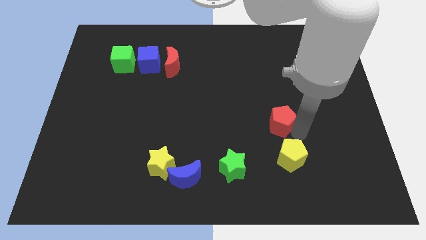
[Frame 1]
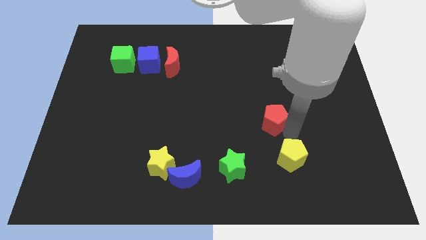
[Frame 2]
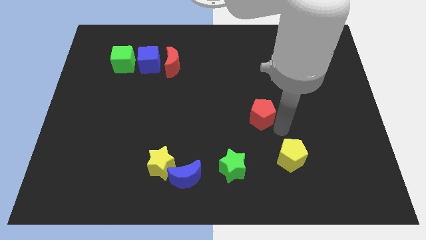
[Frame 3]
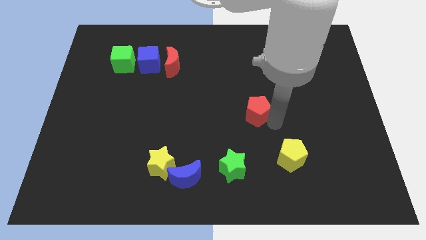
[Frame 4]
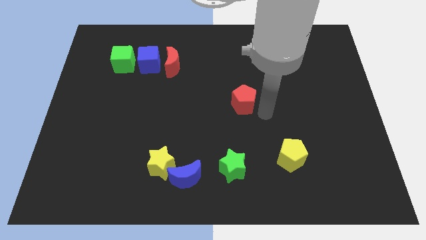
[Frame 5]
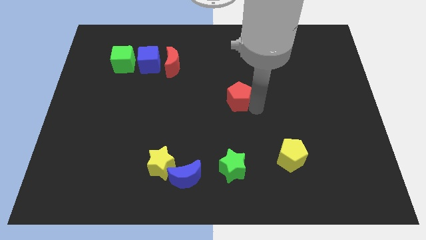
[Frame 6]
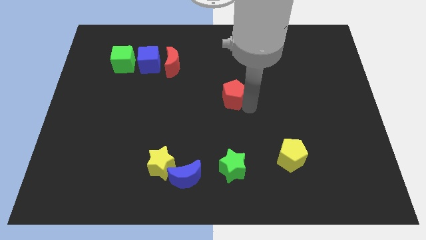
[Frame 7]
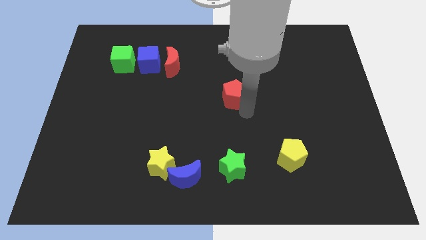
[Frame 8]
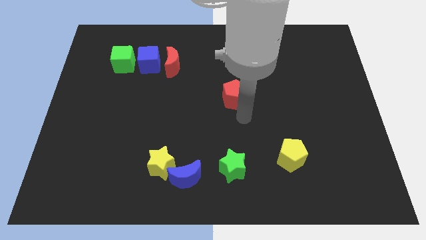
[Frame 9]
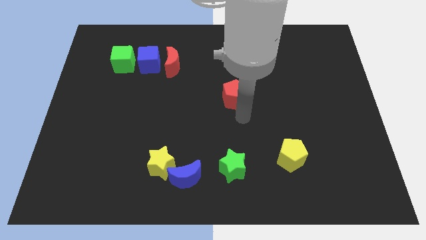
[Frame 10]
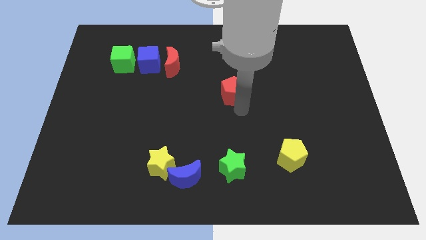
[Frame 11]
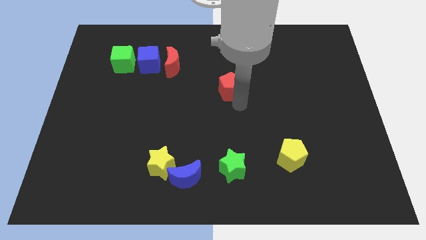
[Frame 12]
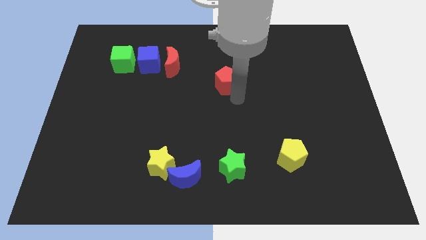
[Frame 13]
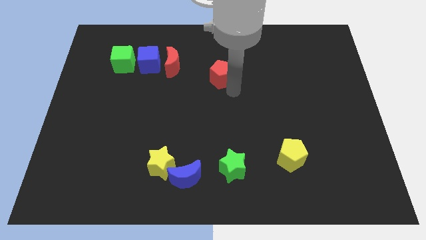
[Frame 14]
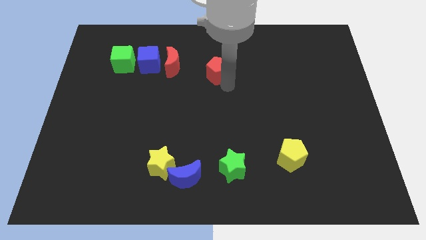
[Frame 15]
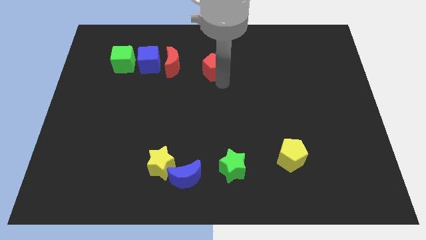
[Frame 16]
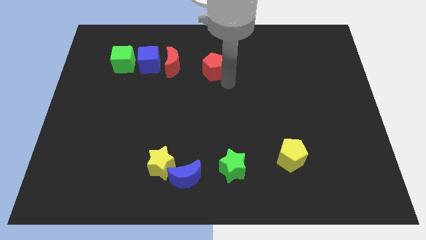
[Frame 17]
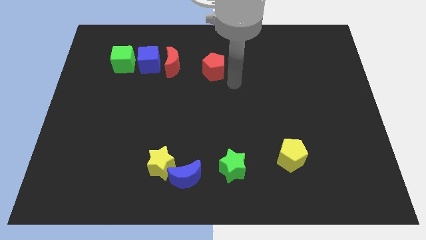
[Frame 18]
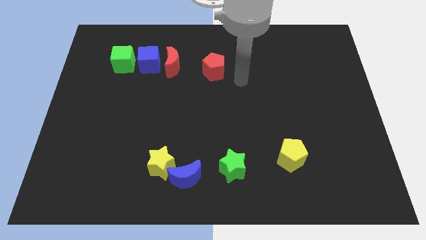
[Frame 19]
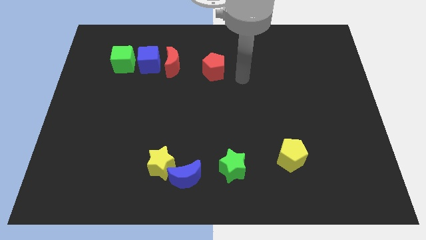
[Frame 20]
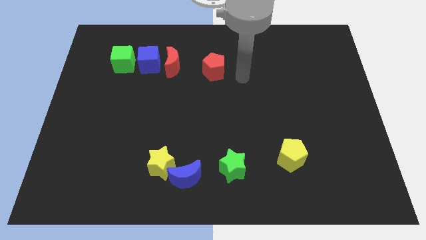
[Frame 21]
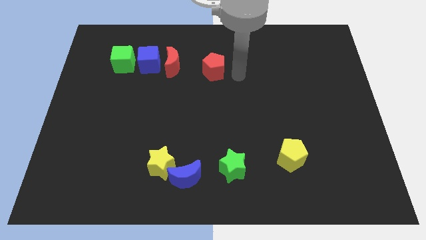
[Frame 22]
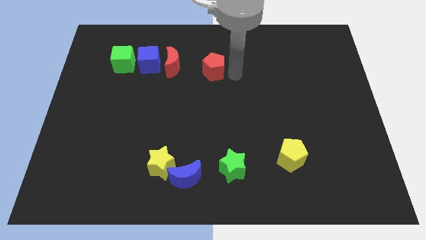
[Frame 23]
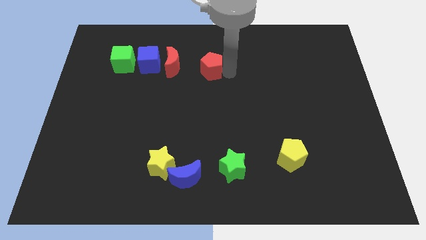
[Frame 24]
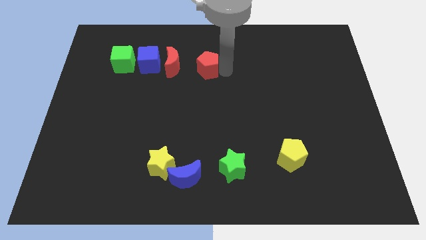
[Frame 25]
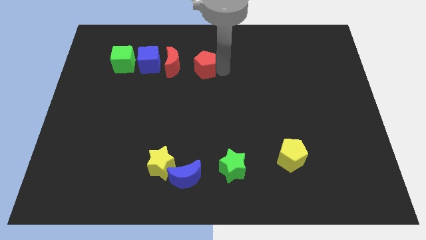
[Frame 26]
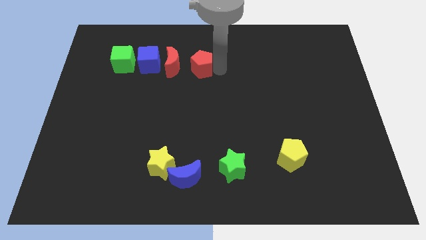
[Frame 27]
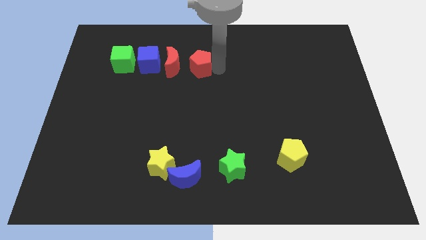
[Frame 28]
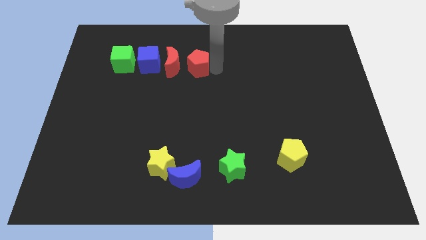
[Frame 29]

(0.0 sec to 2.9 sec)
place red pentagon to the right of the red crescent

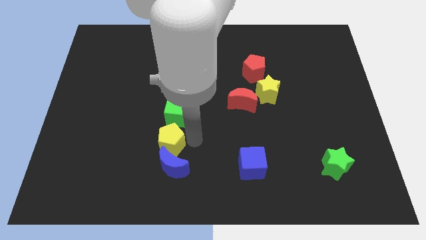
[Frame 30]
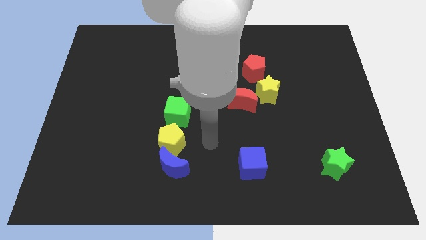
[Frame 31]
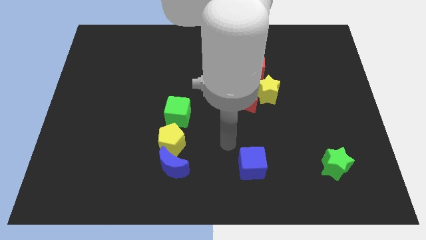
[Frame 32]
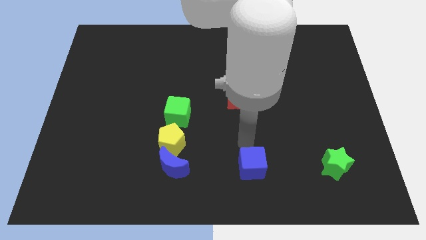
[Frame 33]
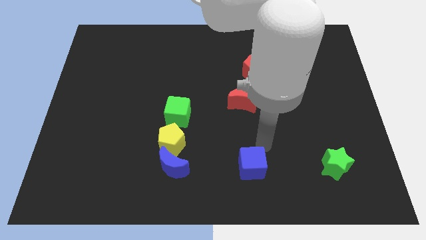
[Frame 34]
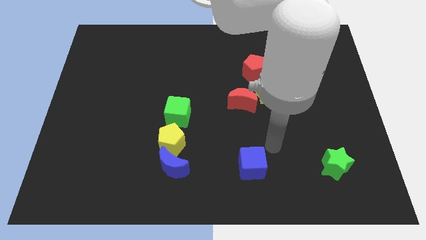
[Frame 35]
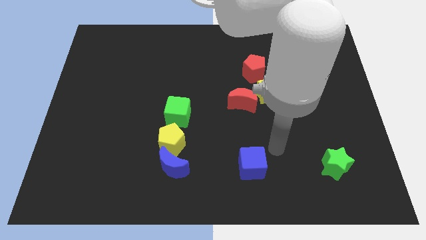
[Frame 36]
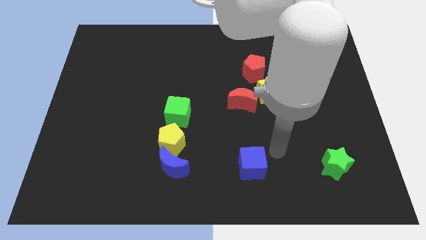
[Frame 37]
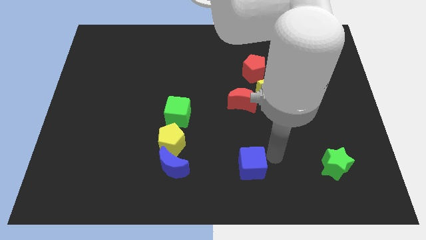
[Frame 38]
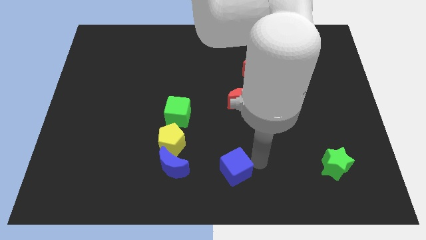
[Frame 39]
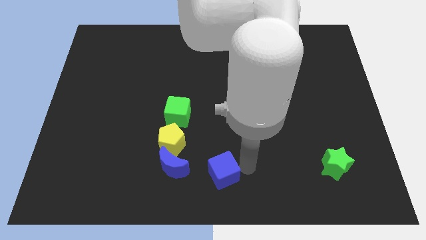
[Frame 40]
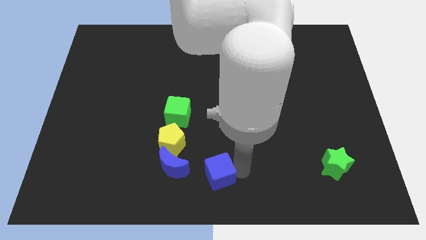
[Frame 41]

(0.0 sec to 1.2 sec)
move the blue block to the right side of the blue moon

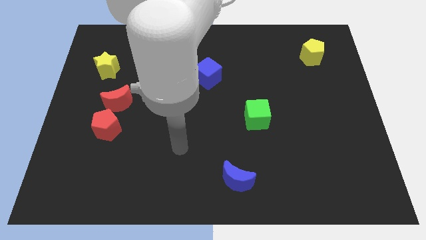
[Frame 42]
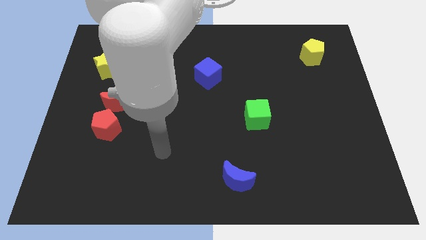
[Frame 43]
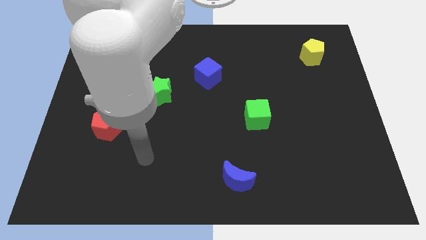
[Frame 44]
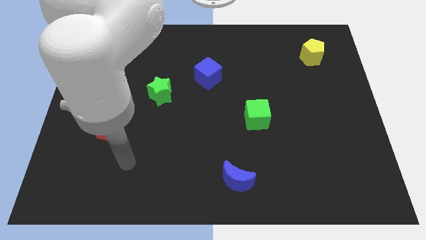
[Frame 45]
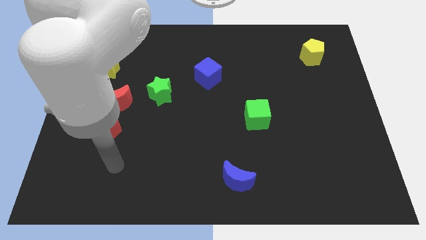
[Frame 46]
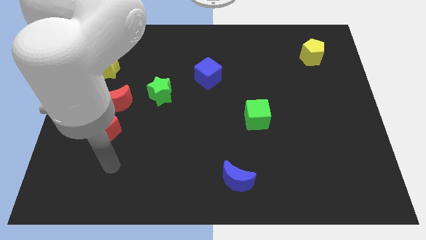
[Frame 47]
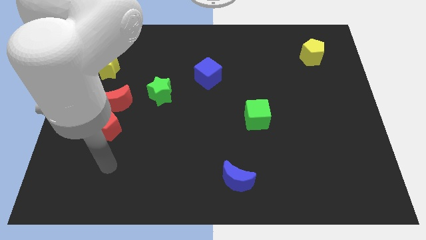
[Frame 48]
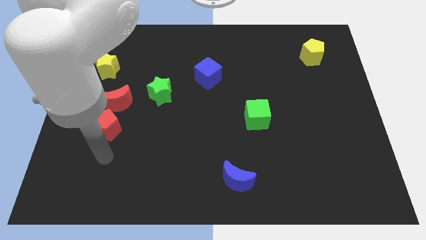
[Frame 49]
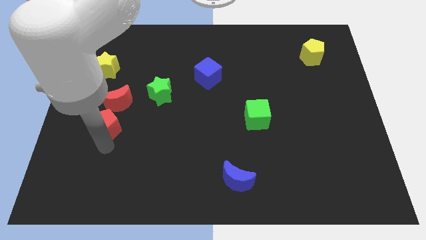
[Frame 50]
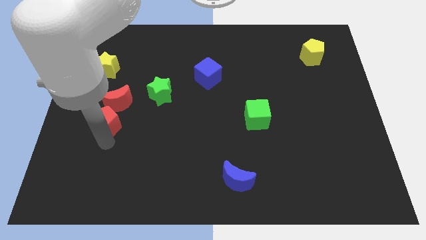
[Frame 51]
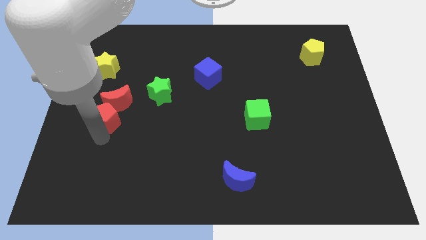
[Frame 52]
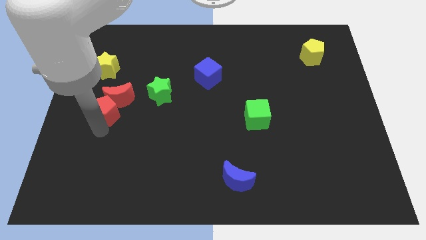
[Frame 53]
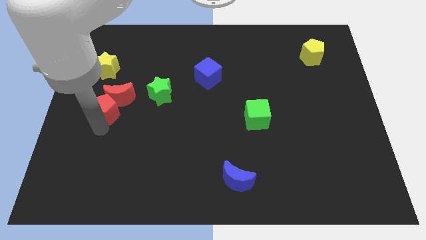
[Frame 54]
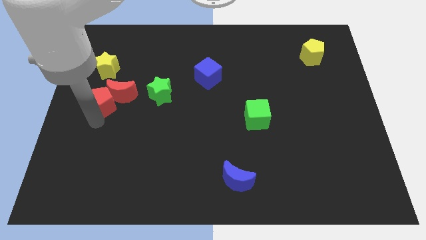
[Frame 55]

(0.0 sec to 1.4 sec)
move the red pentagon into the red crescent

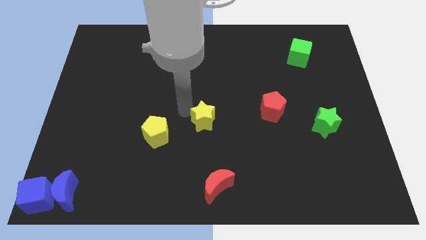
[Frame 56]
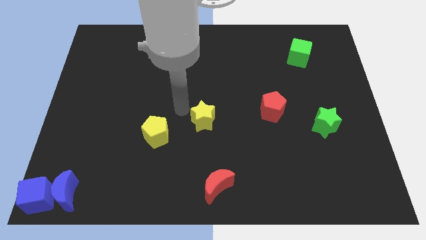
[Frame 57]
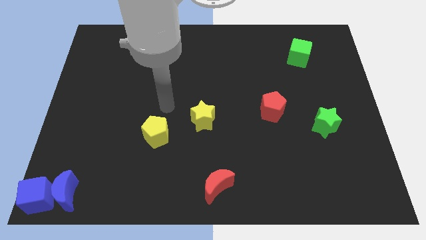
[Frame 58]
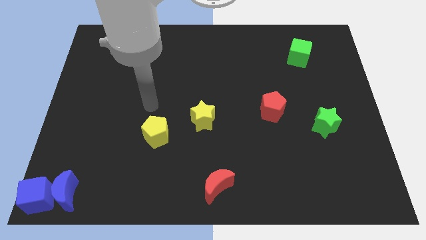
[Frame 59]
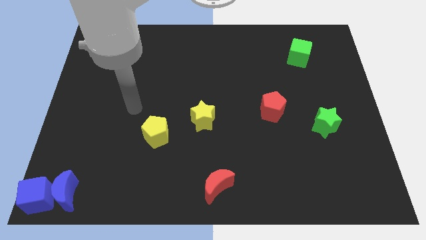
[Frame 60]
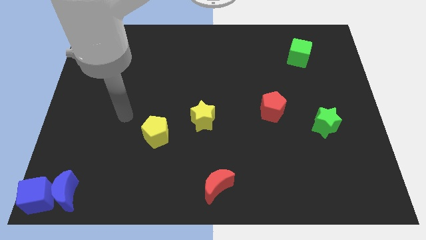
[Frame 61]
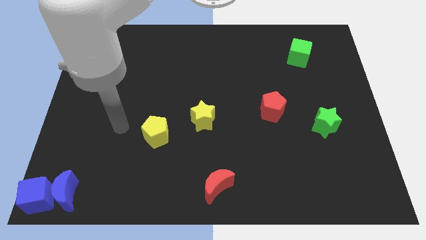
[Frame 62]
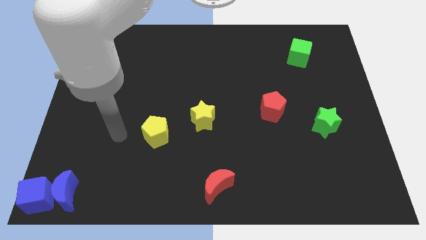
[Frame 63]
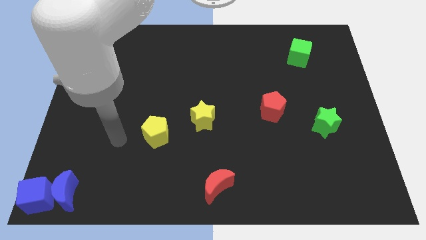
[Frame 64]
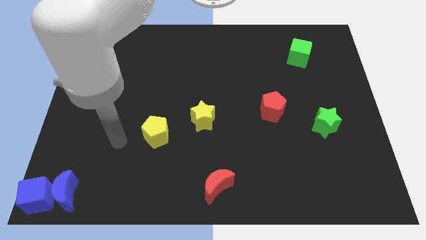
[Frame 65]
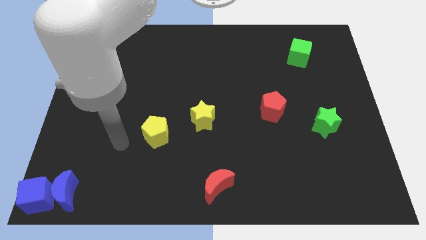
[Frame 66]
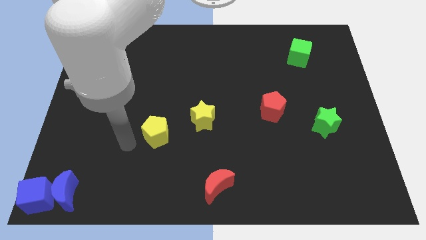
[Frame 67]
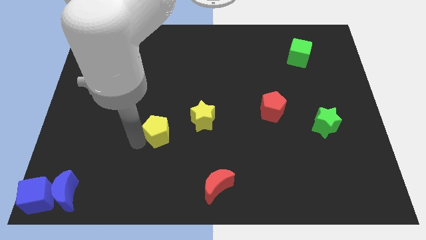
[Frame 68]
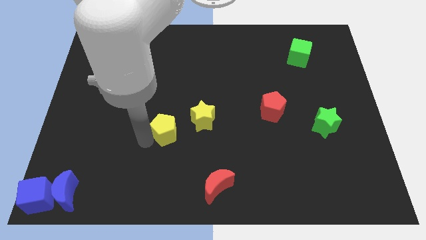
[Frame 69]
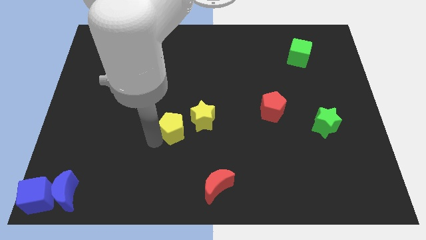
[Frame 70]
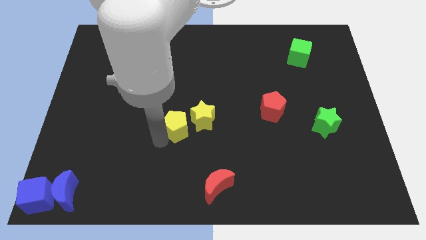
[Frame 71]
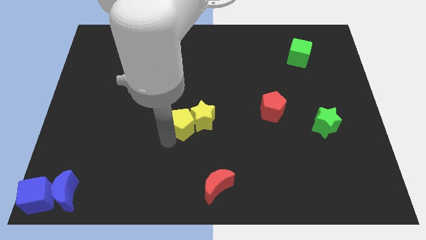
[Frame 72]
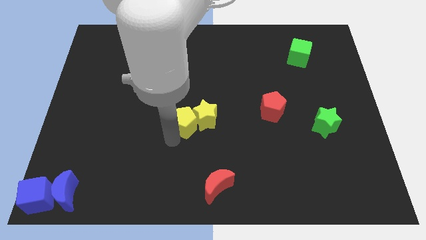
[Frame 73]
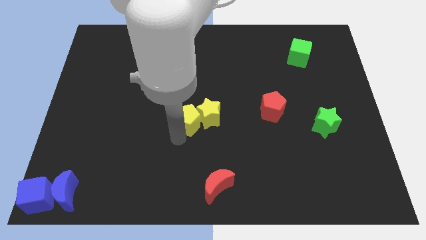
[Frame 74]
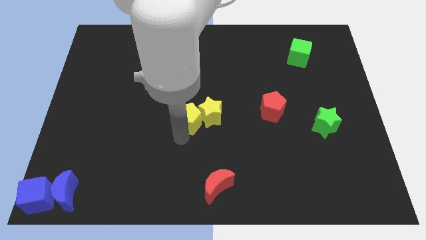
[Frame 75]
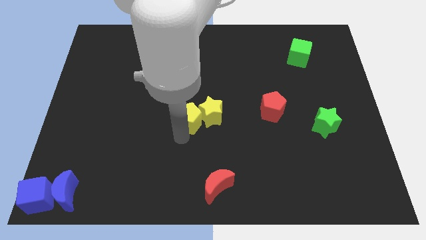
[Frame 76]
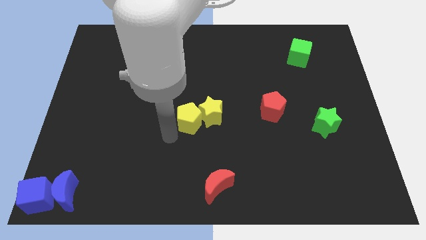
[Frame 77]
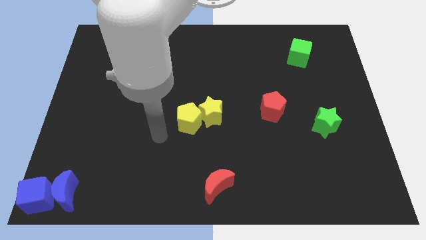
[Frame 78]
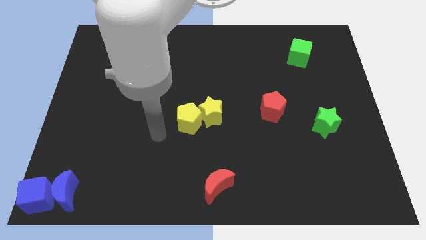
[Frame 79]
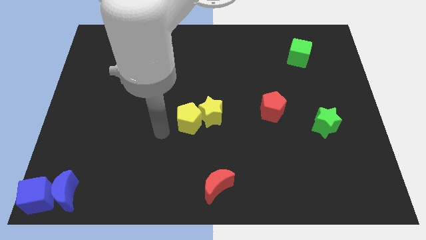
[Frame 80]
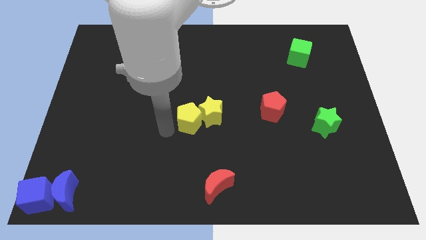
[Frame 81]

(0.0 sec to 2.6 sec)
move yellow pentagon into yellow star

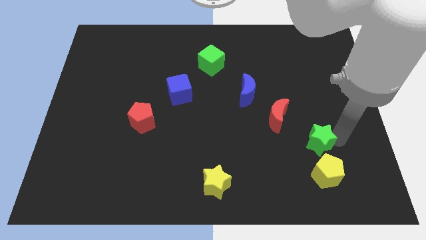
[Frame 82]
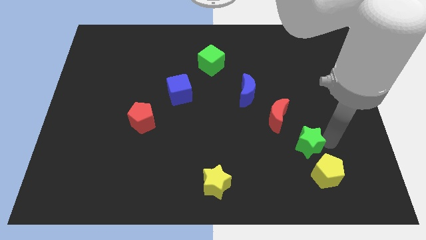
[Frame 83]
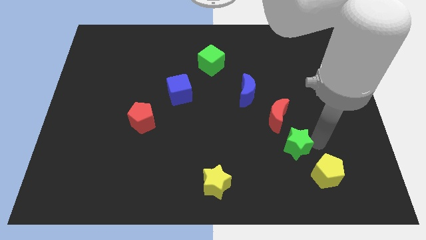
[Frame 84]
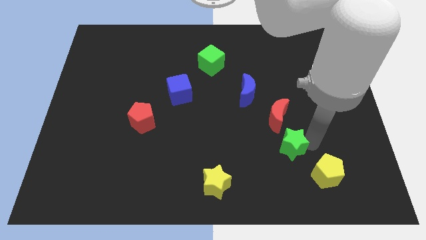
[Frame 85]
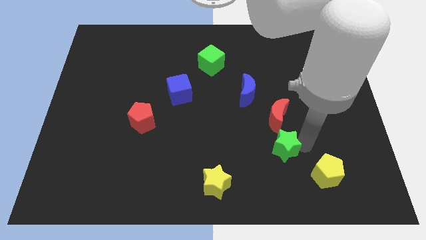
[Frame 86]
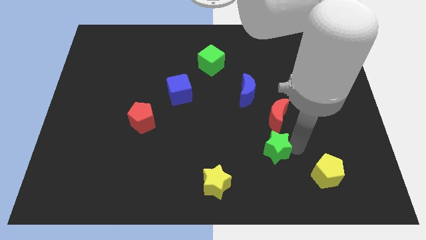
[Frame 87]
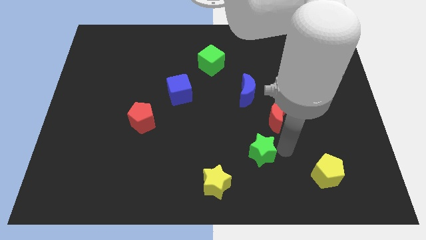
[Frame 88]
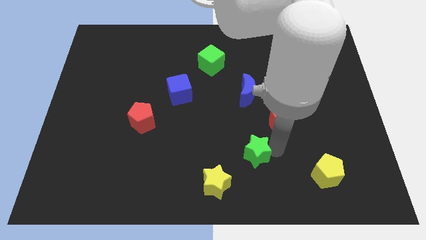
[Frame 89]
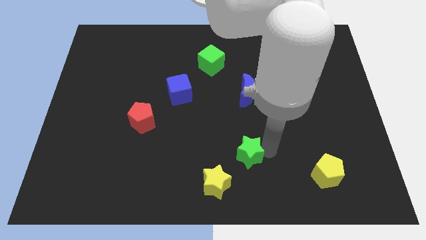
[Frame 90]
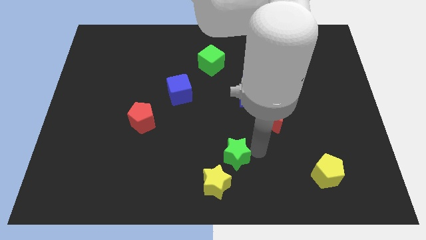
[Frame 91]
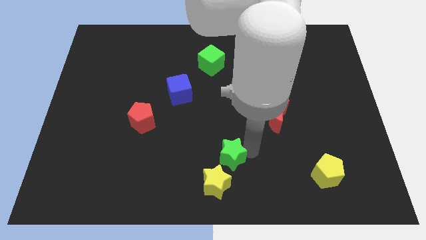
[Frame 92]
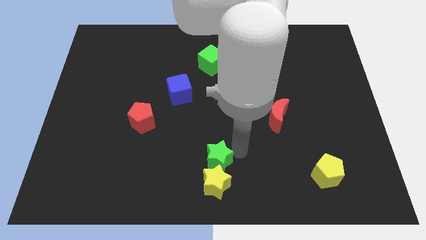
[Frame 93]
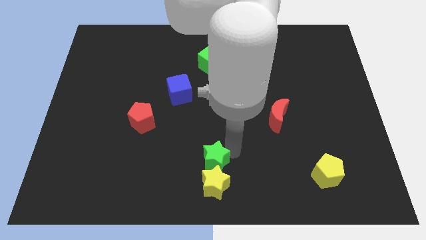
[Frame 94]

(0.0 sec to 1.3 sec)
push the green star to the top side of the yellow star
